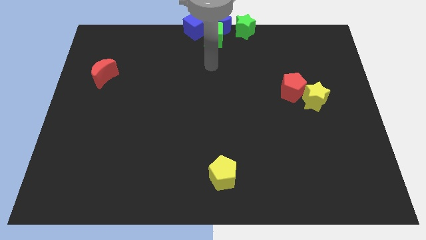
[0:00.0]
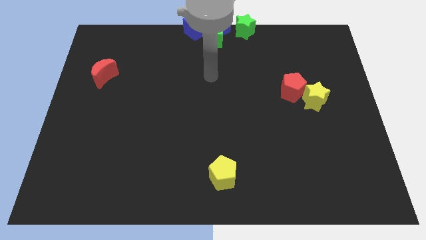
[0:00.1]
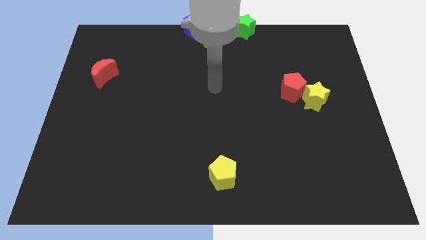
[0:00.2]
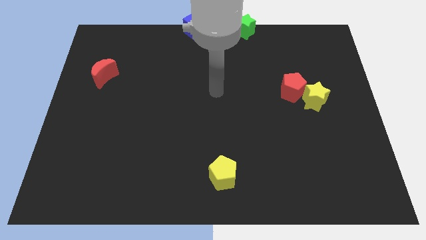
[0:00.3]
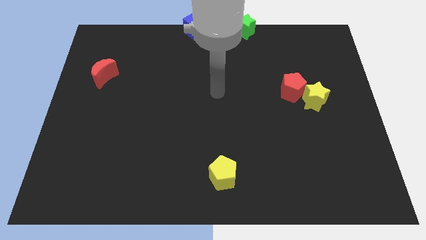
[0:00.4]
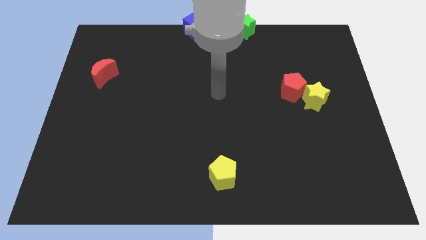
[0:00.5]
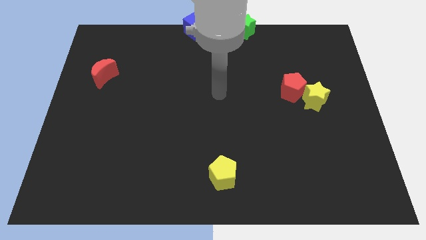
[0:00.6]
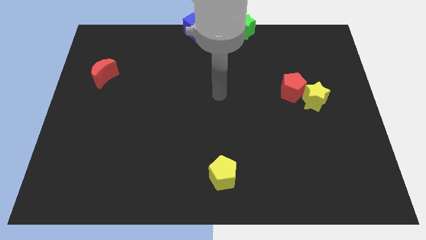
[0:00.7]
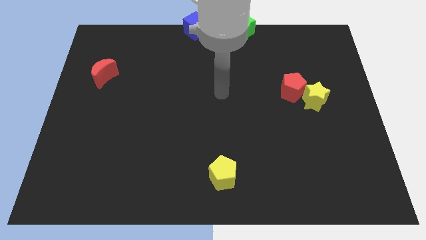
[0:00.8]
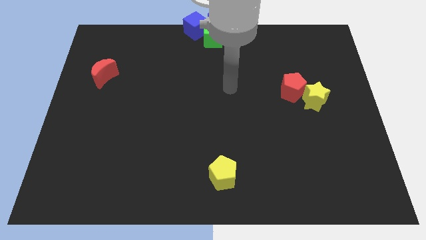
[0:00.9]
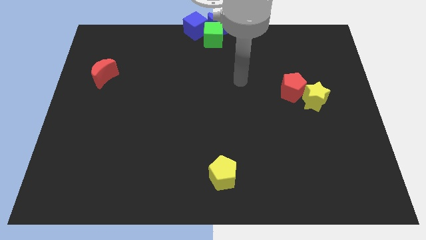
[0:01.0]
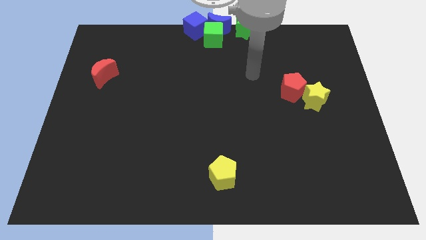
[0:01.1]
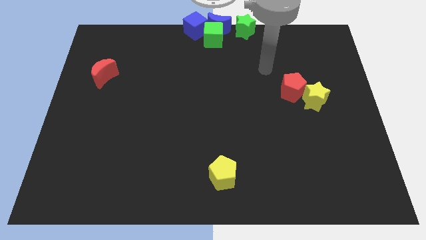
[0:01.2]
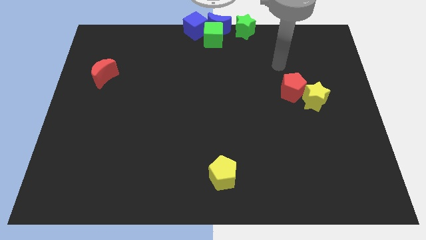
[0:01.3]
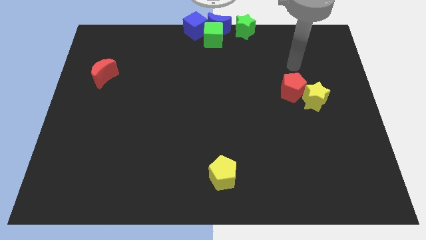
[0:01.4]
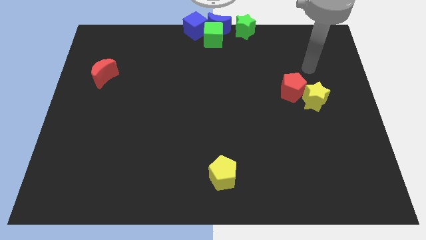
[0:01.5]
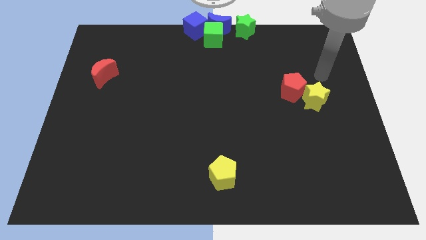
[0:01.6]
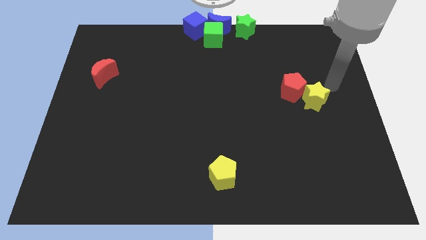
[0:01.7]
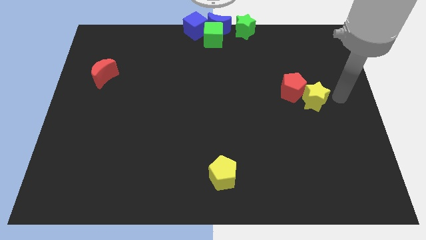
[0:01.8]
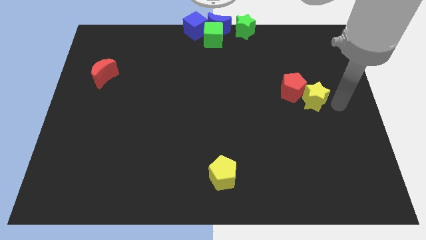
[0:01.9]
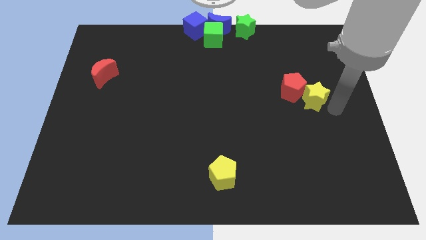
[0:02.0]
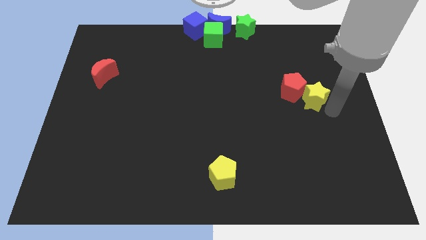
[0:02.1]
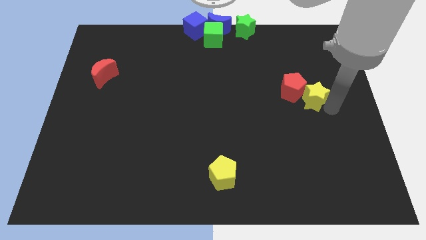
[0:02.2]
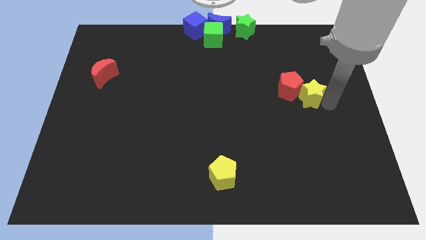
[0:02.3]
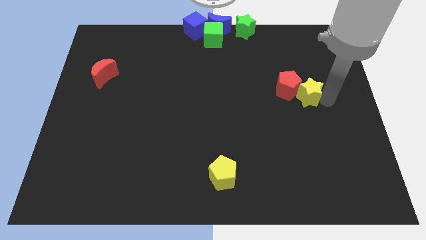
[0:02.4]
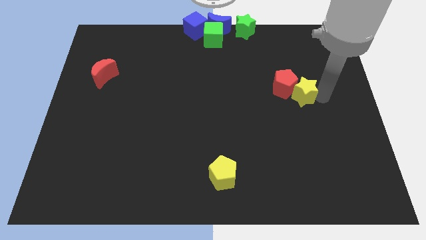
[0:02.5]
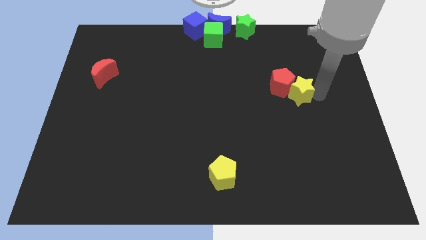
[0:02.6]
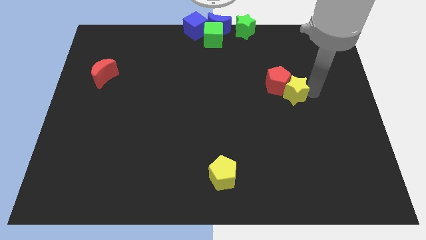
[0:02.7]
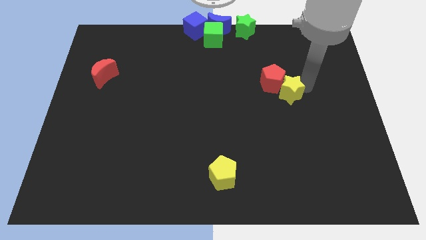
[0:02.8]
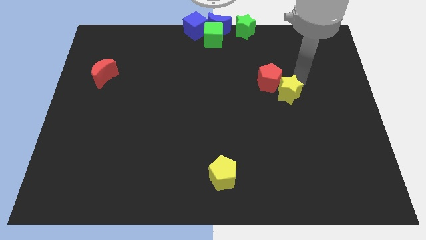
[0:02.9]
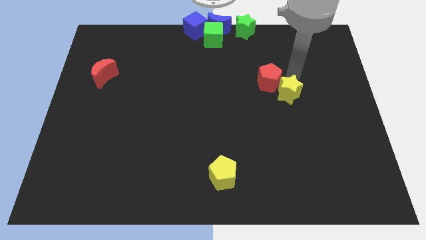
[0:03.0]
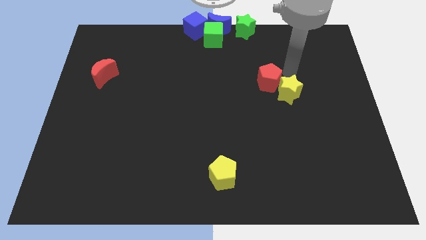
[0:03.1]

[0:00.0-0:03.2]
drag the red pentagon and yellow star towards the top center of the board

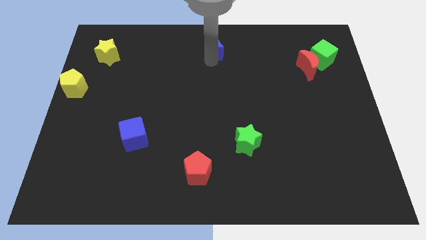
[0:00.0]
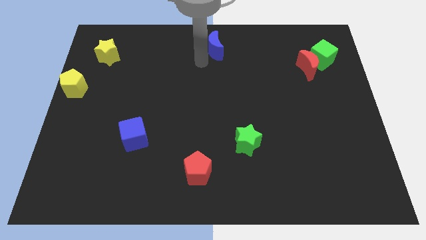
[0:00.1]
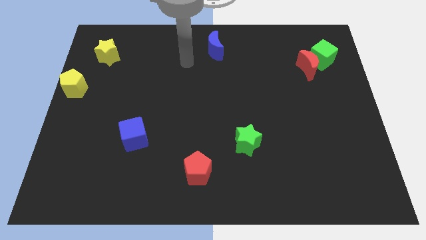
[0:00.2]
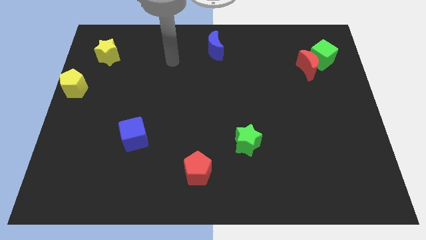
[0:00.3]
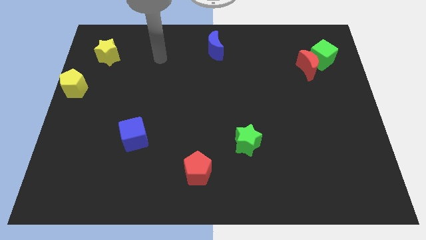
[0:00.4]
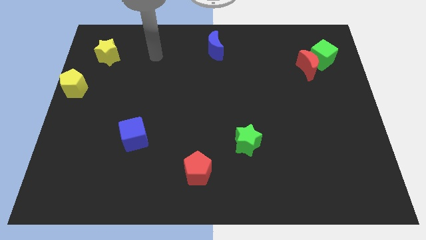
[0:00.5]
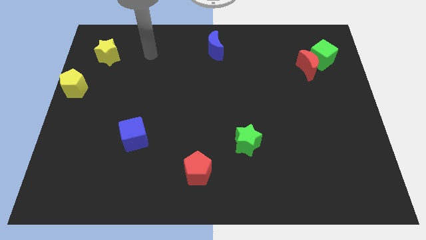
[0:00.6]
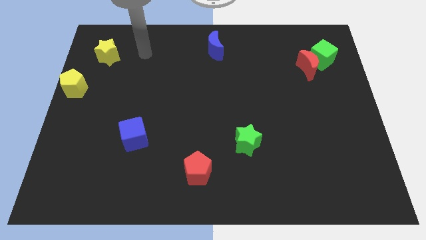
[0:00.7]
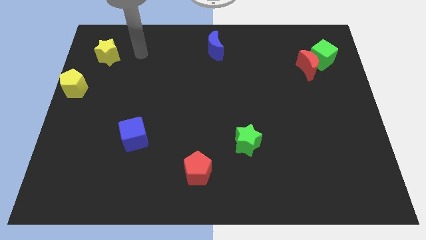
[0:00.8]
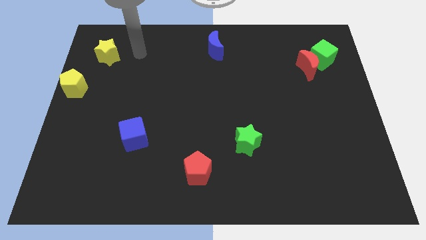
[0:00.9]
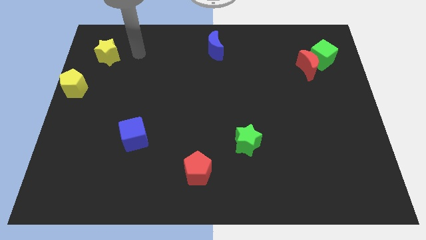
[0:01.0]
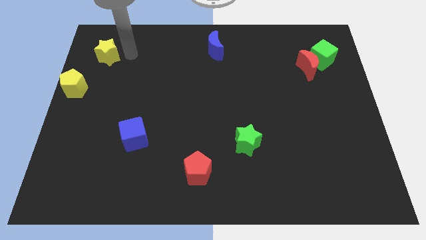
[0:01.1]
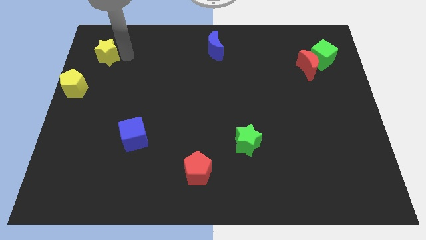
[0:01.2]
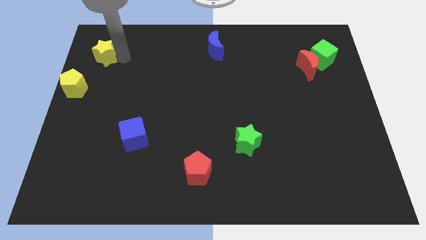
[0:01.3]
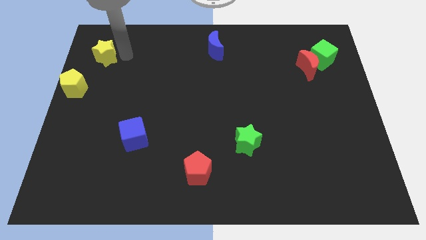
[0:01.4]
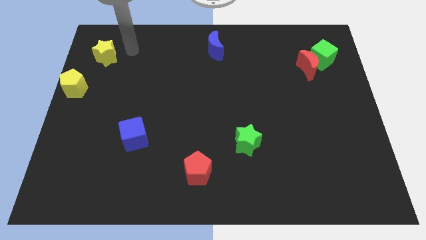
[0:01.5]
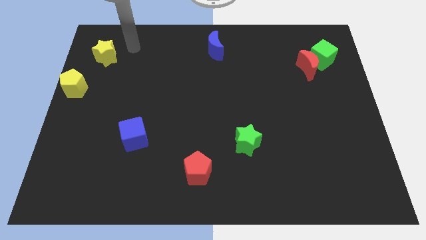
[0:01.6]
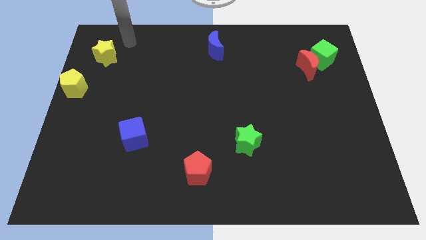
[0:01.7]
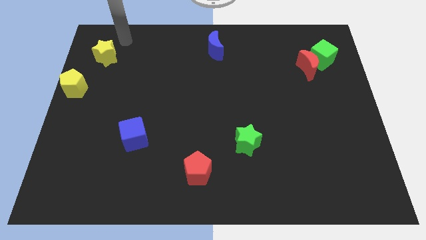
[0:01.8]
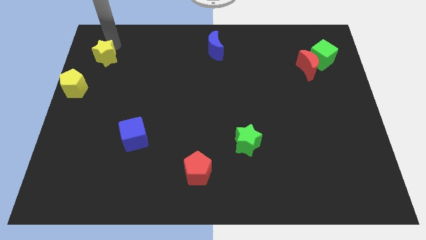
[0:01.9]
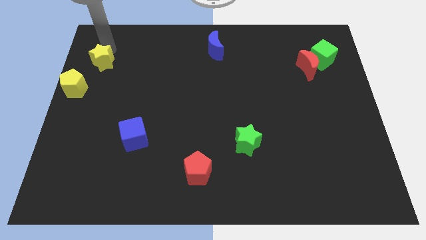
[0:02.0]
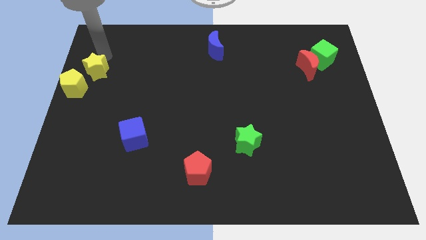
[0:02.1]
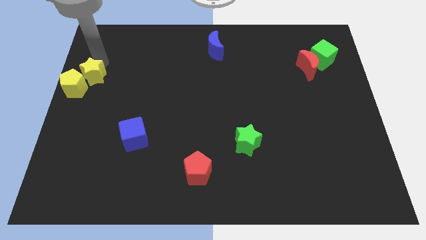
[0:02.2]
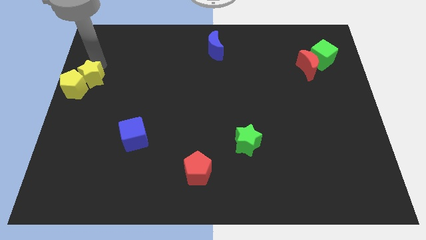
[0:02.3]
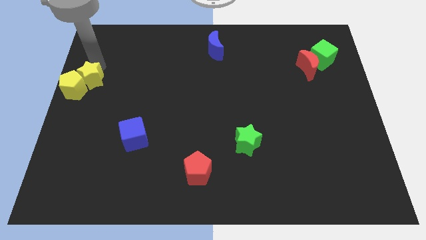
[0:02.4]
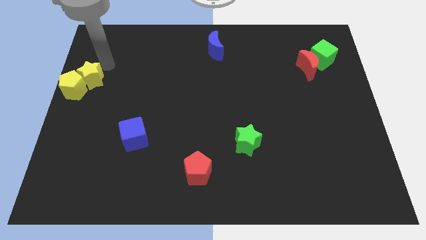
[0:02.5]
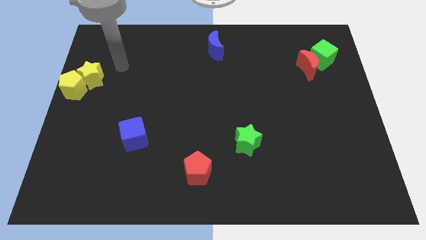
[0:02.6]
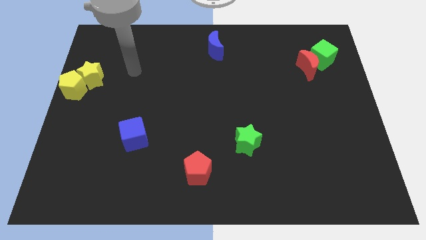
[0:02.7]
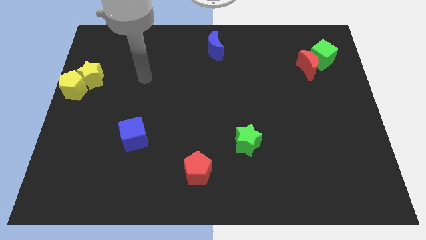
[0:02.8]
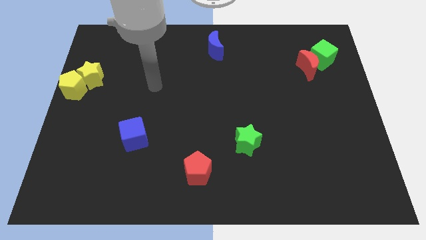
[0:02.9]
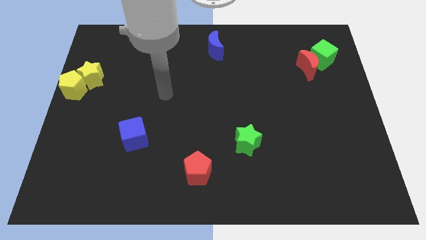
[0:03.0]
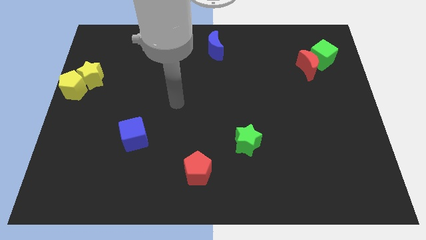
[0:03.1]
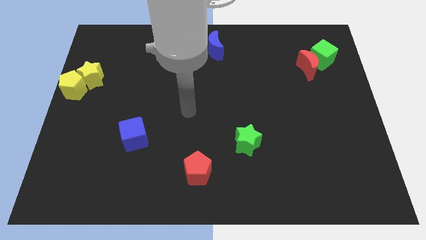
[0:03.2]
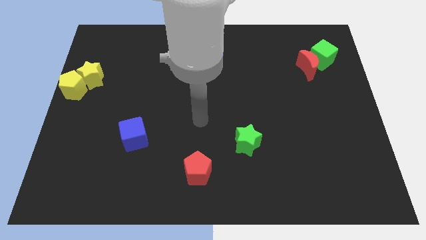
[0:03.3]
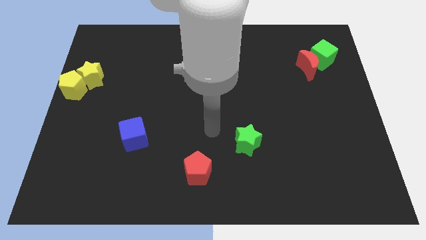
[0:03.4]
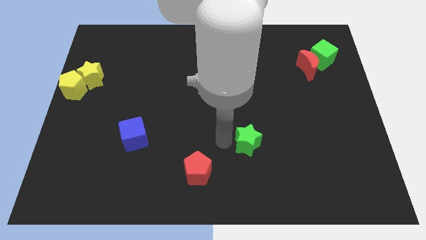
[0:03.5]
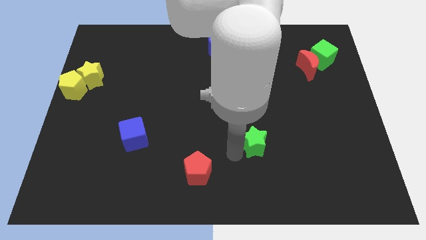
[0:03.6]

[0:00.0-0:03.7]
move your arm away from the yellow star

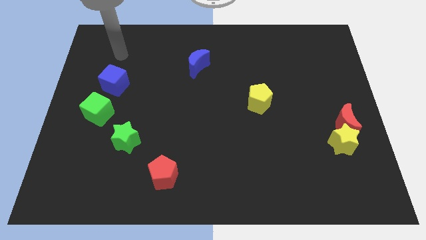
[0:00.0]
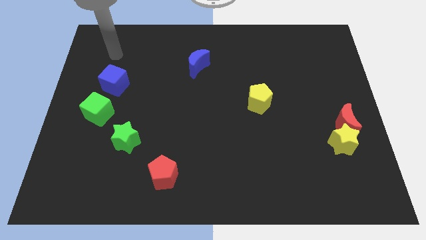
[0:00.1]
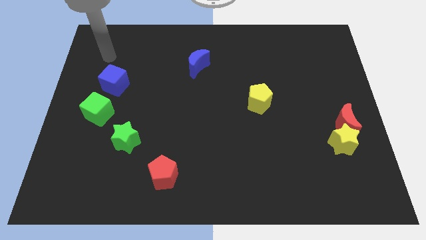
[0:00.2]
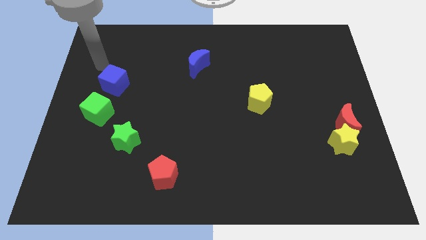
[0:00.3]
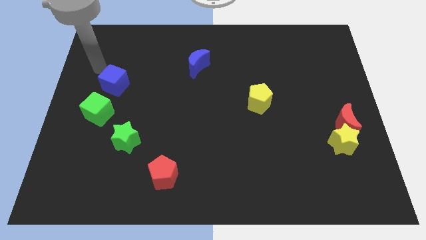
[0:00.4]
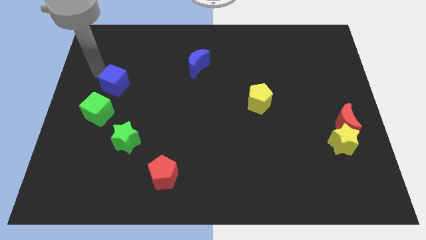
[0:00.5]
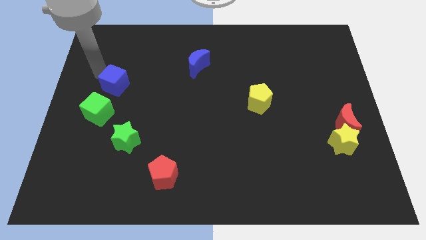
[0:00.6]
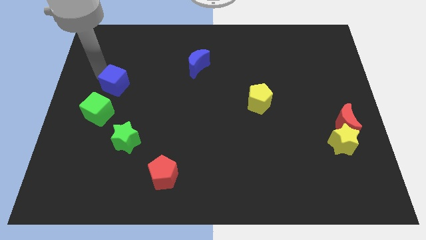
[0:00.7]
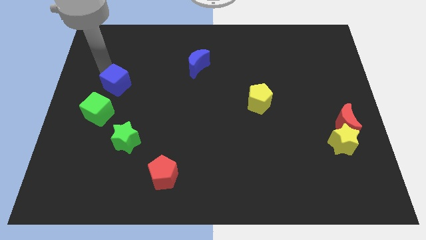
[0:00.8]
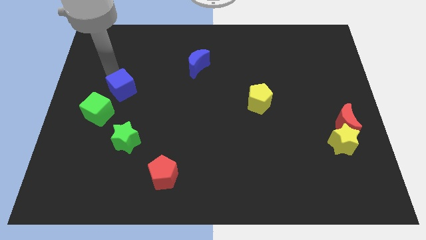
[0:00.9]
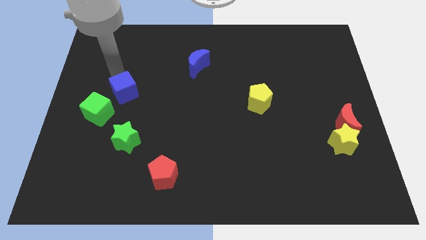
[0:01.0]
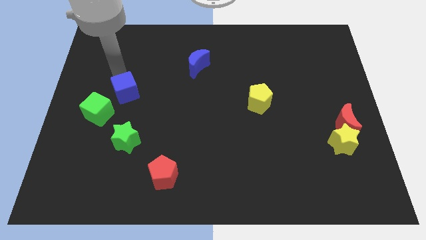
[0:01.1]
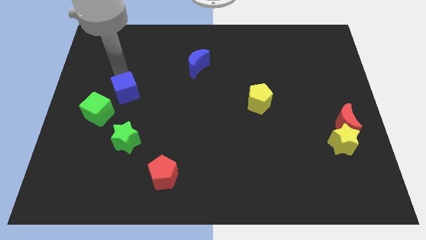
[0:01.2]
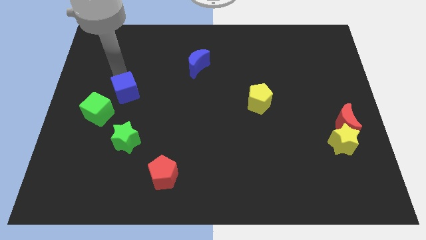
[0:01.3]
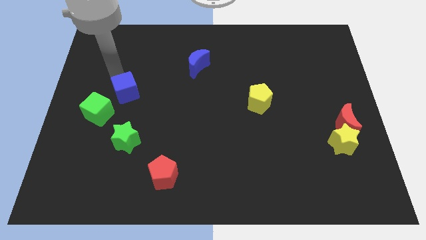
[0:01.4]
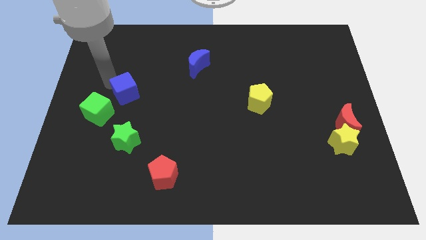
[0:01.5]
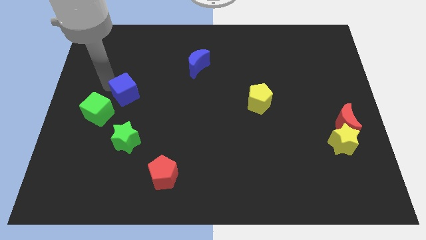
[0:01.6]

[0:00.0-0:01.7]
move the blue cube to the right of the green cube

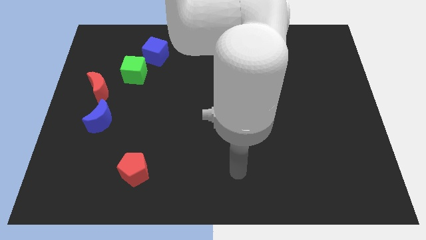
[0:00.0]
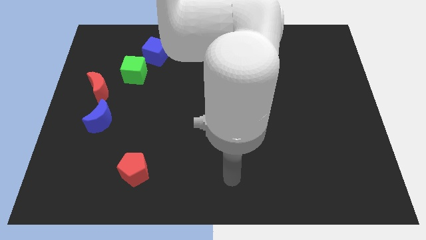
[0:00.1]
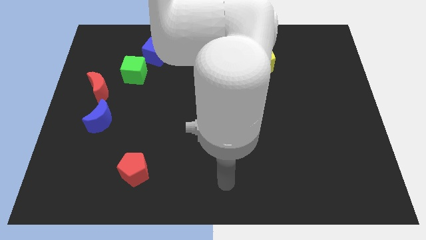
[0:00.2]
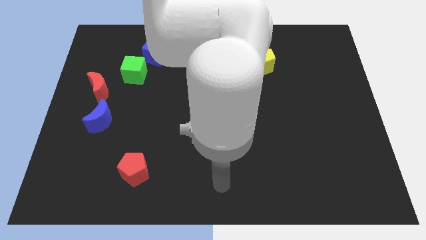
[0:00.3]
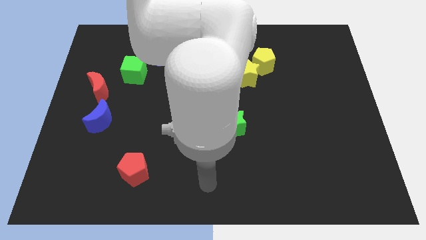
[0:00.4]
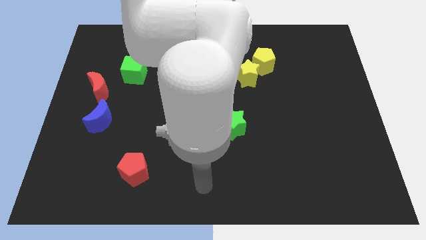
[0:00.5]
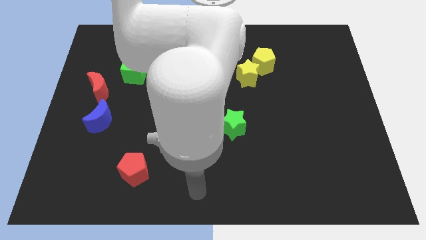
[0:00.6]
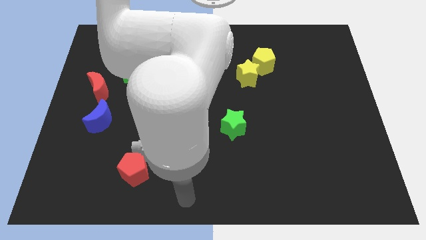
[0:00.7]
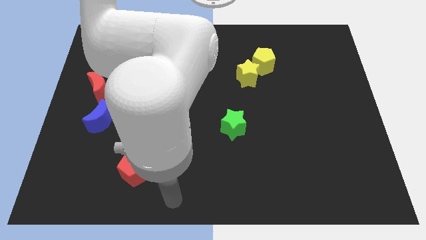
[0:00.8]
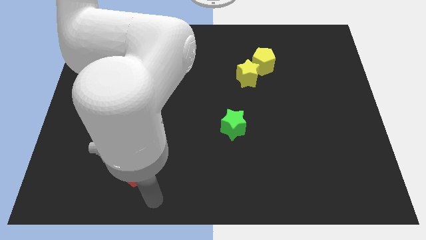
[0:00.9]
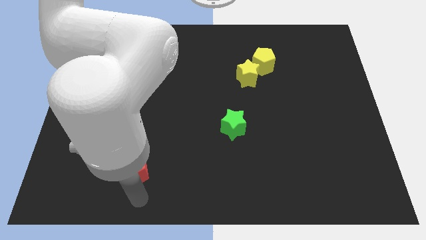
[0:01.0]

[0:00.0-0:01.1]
point your arm at the bottom of the red pentagon
